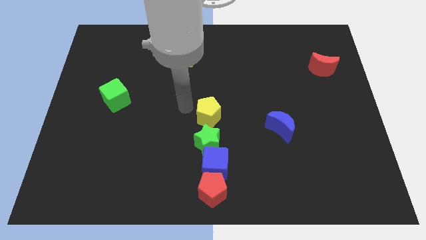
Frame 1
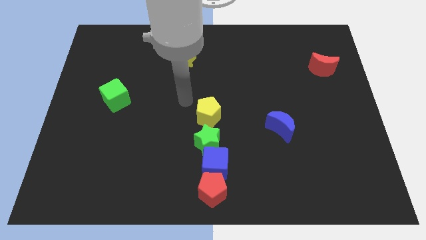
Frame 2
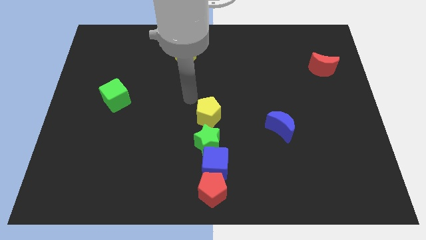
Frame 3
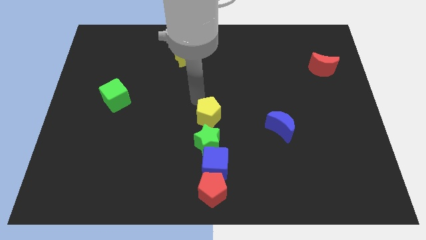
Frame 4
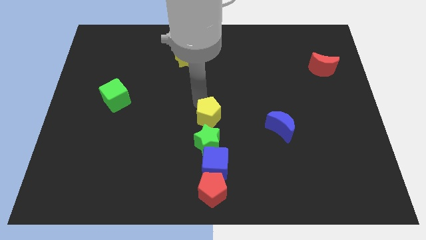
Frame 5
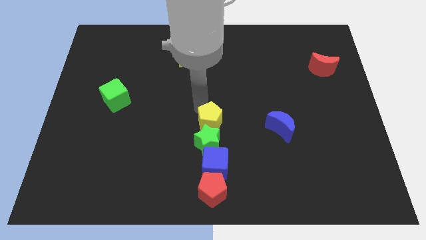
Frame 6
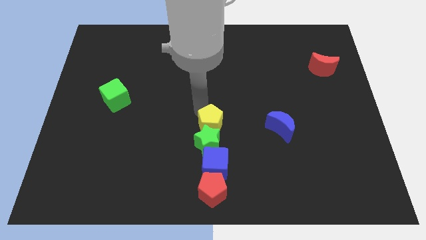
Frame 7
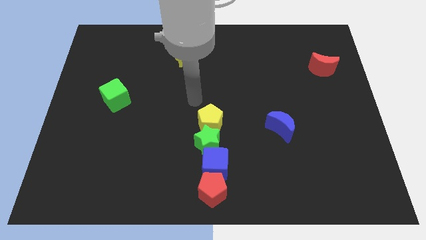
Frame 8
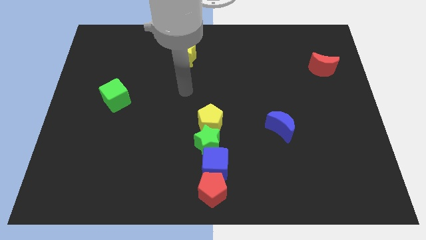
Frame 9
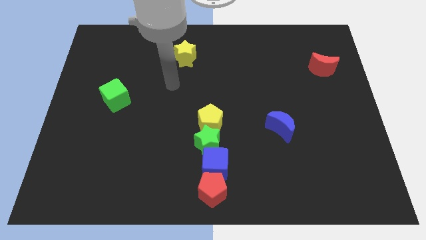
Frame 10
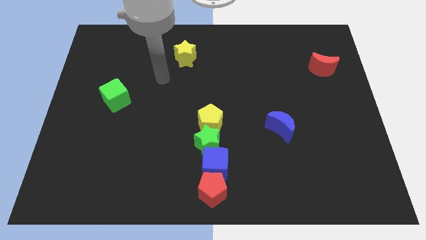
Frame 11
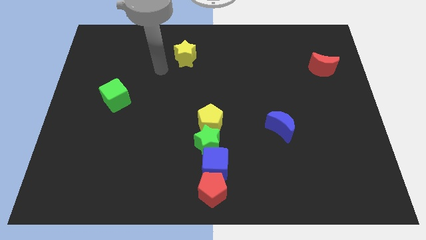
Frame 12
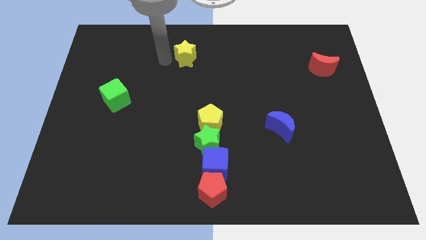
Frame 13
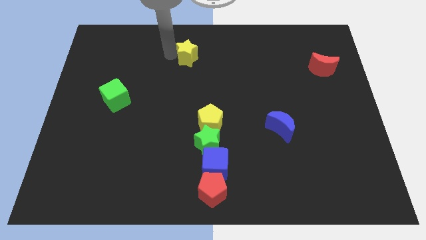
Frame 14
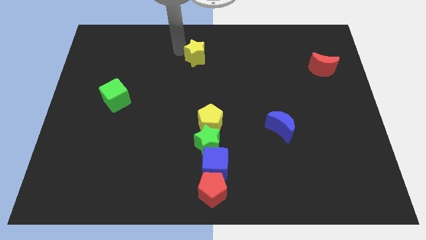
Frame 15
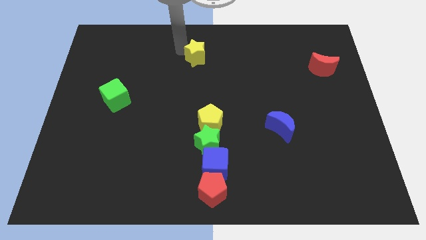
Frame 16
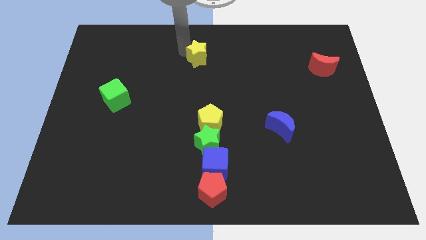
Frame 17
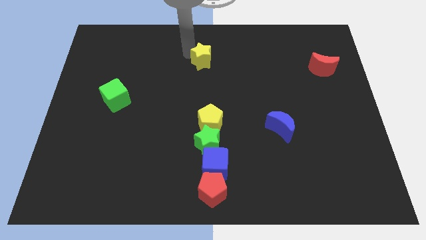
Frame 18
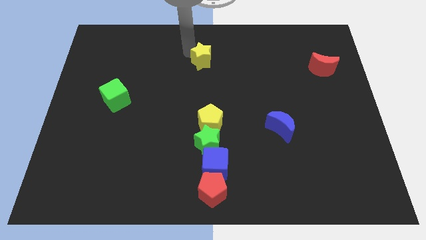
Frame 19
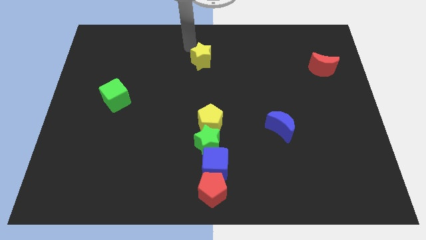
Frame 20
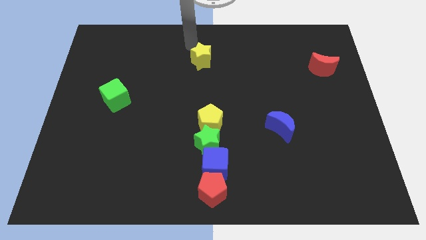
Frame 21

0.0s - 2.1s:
adjust the yellow pentagon to the bottom of green star

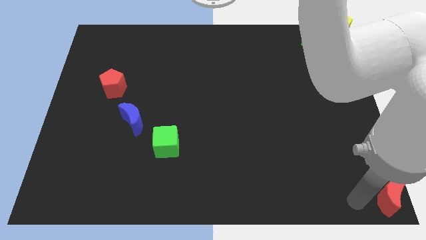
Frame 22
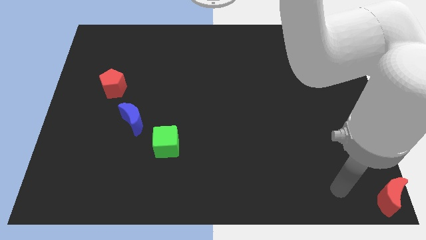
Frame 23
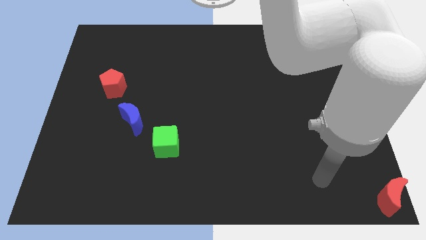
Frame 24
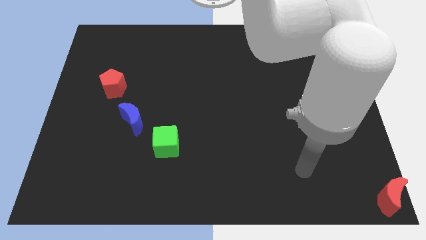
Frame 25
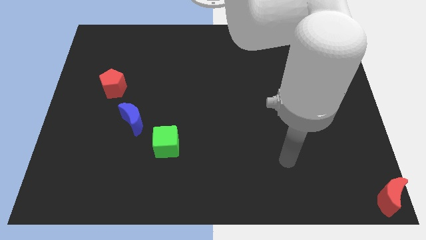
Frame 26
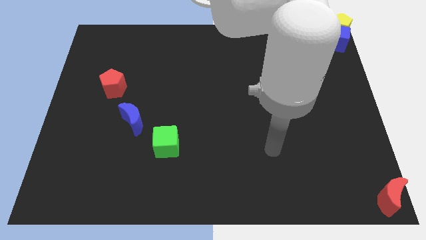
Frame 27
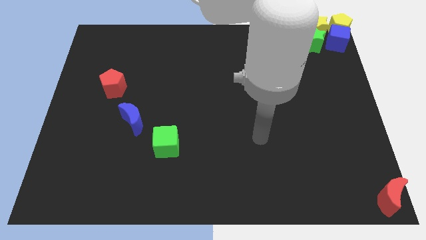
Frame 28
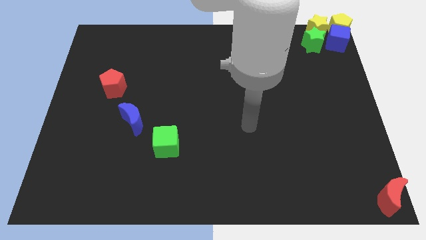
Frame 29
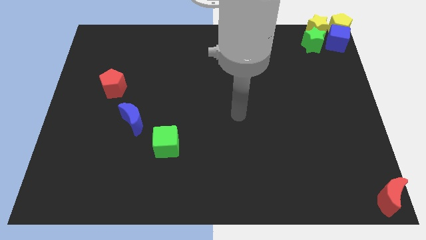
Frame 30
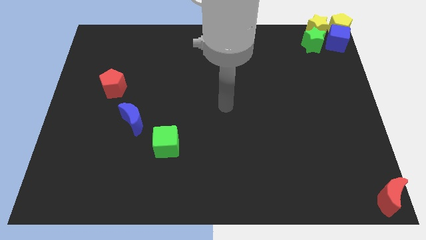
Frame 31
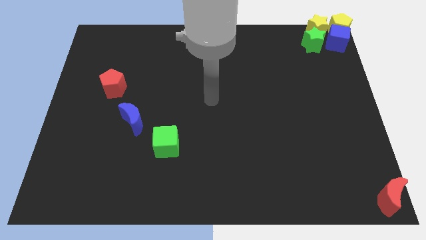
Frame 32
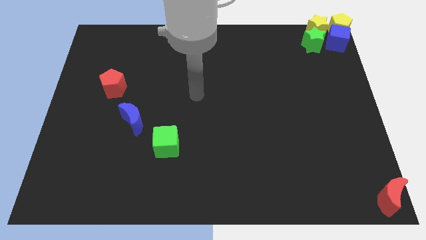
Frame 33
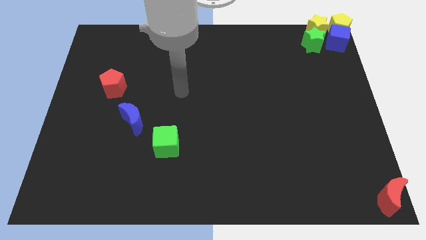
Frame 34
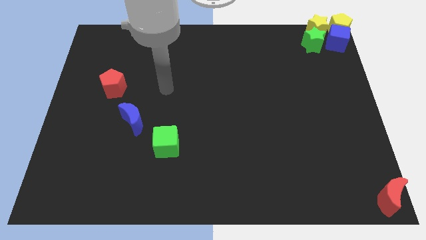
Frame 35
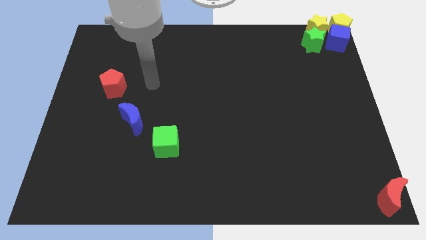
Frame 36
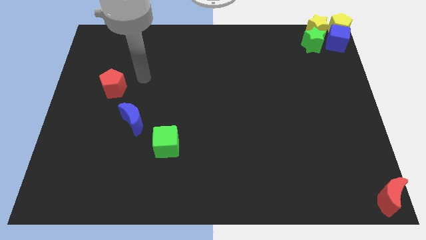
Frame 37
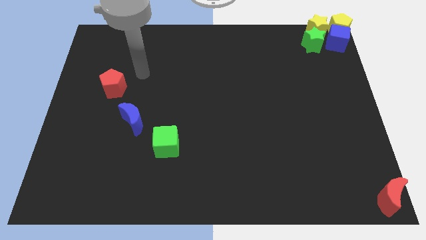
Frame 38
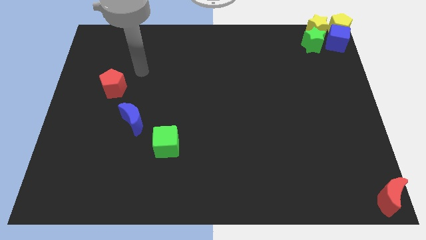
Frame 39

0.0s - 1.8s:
go away from the red moon

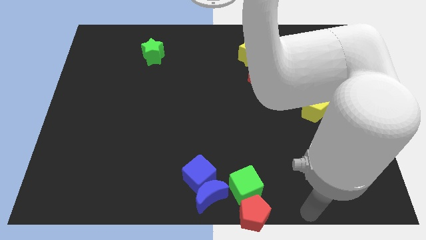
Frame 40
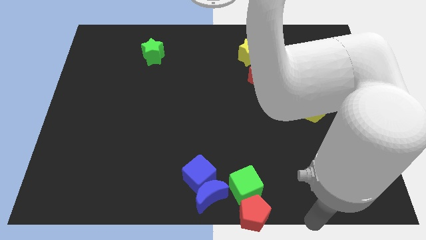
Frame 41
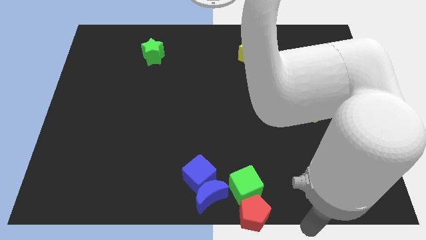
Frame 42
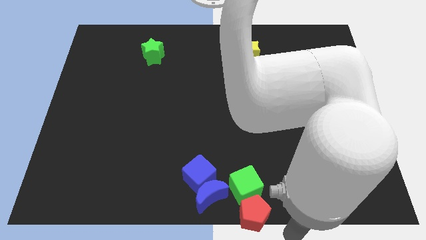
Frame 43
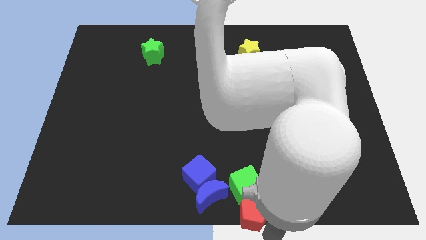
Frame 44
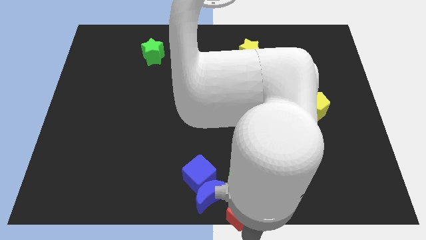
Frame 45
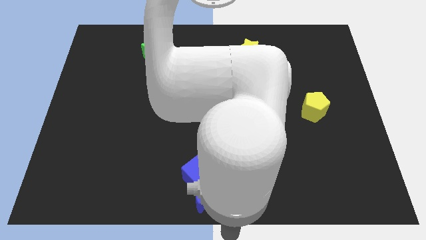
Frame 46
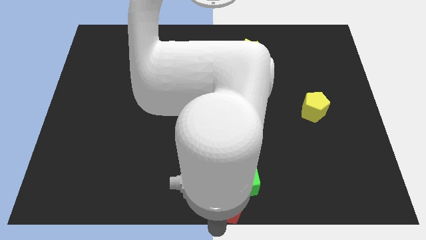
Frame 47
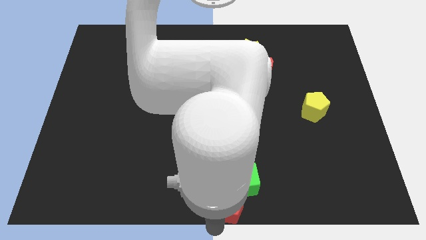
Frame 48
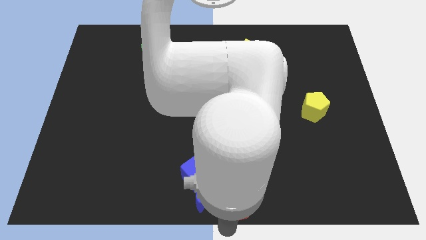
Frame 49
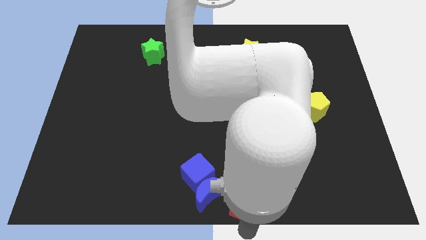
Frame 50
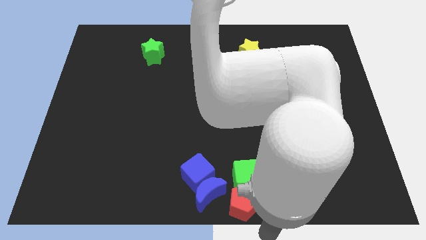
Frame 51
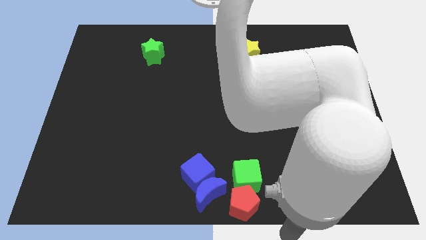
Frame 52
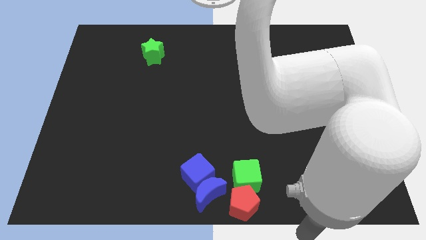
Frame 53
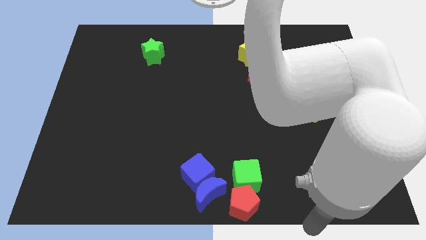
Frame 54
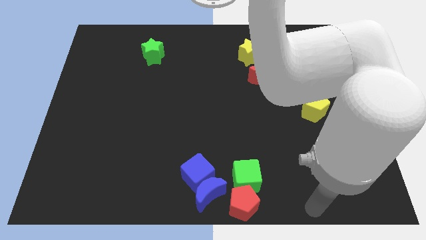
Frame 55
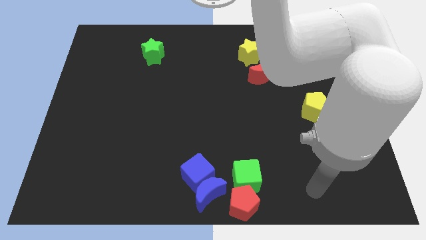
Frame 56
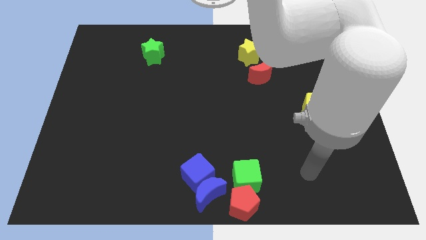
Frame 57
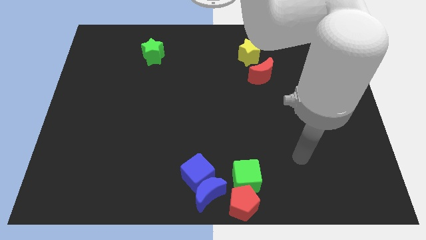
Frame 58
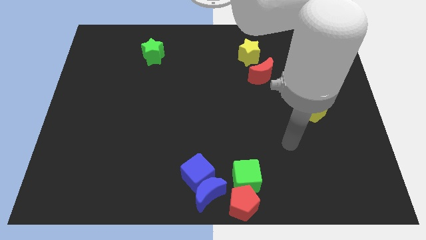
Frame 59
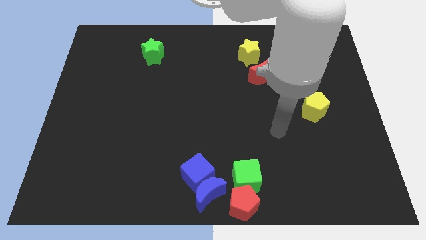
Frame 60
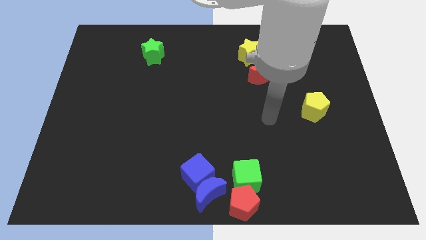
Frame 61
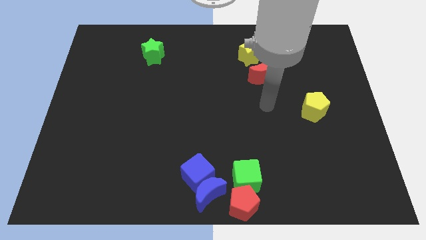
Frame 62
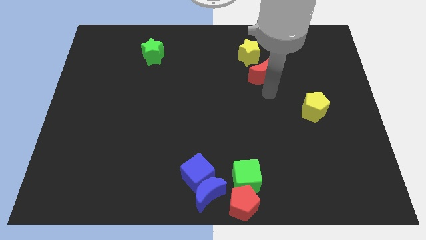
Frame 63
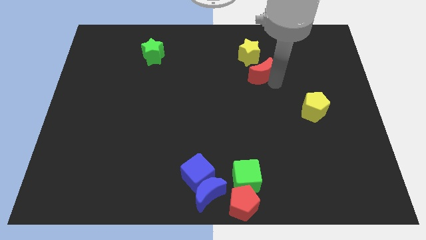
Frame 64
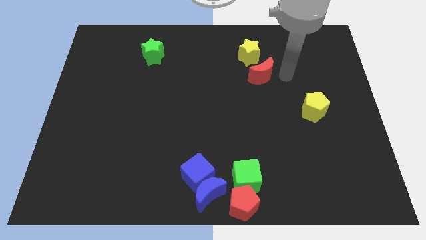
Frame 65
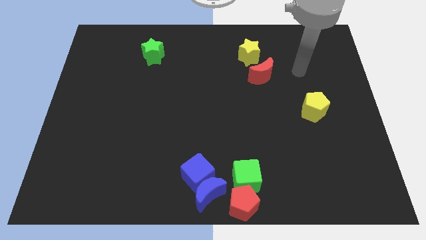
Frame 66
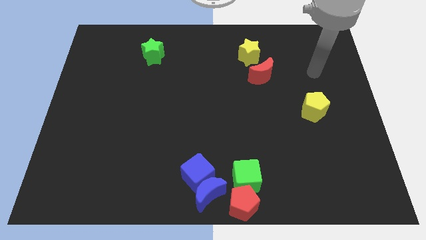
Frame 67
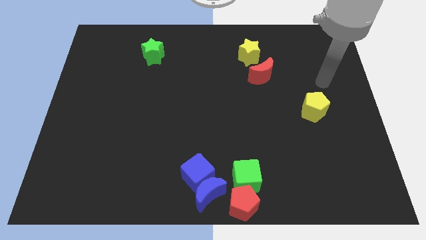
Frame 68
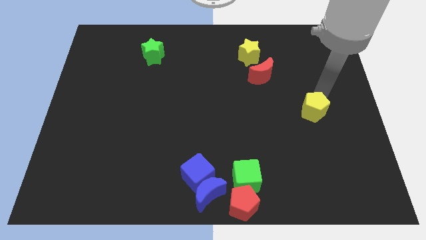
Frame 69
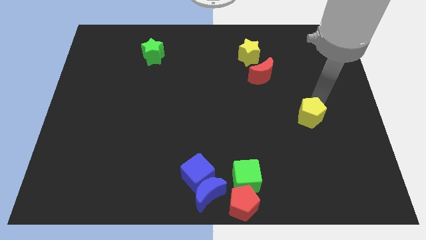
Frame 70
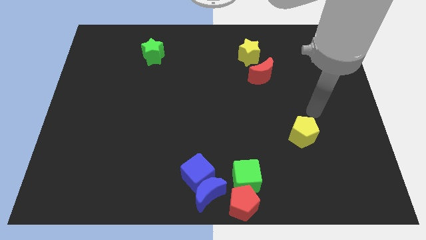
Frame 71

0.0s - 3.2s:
move your arm towards the top of the yellow pentagon

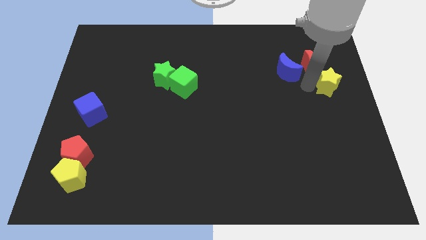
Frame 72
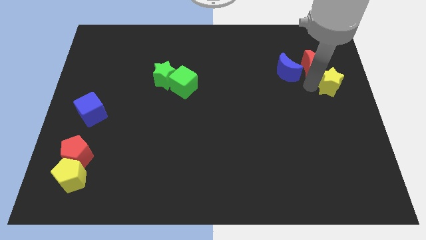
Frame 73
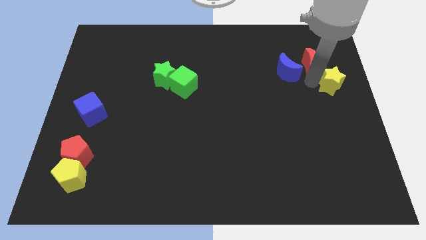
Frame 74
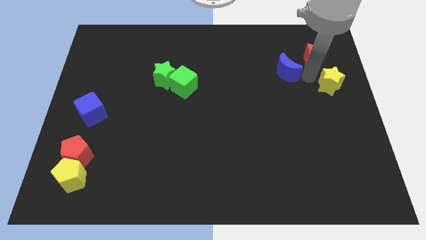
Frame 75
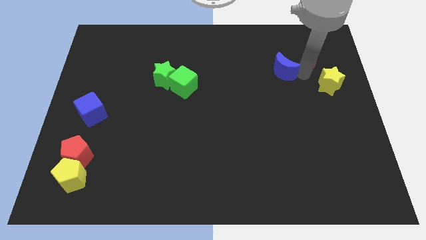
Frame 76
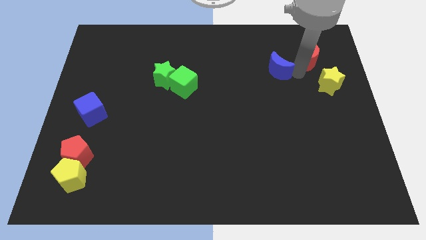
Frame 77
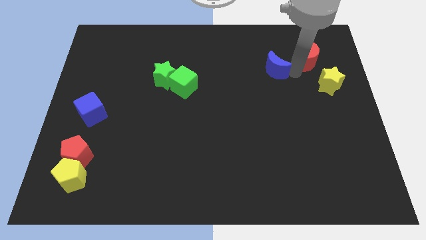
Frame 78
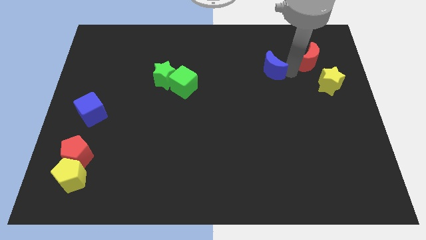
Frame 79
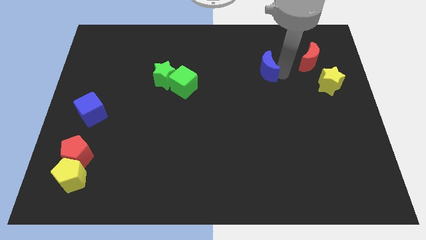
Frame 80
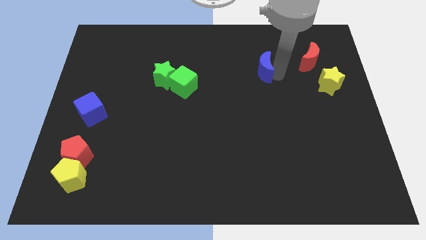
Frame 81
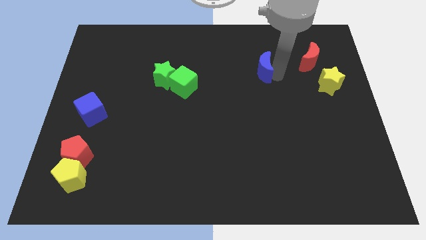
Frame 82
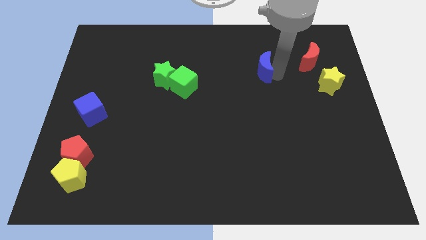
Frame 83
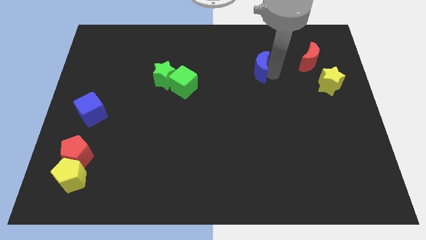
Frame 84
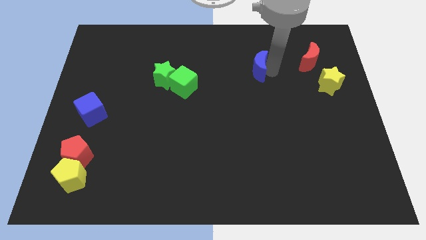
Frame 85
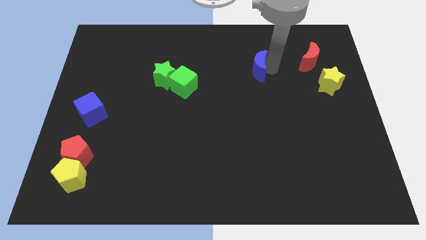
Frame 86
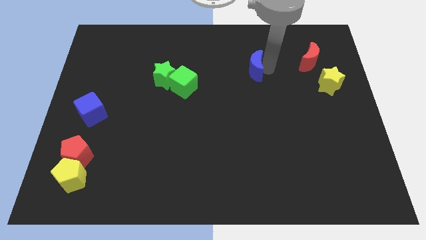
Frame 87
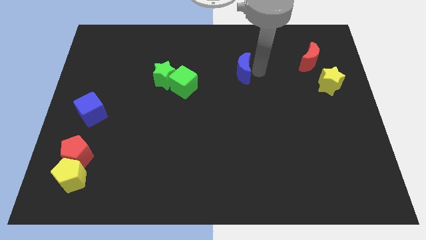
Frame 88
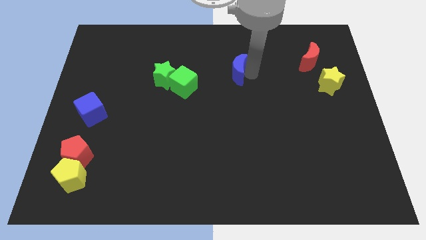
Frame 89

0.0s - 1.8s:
separate the blue moon and red moon

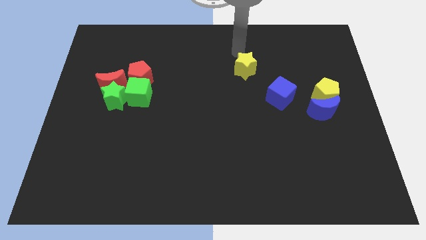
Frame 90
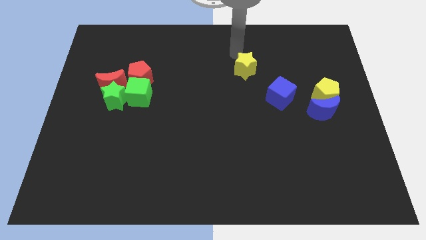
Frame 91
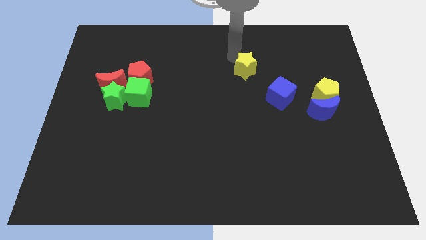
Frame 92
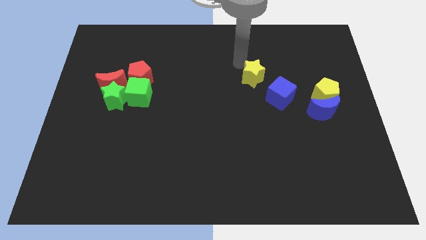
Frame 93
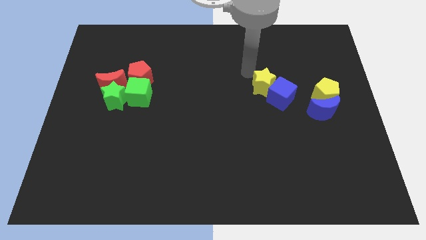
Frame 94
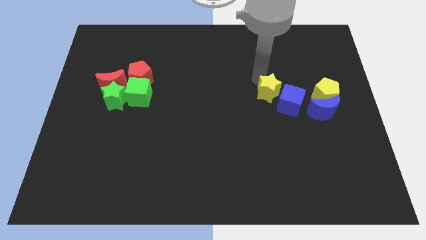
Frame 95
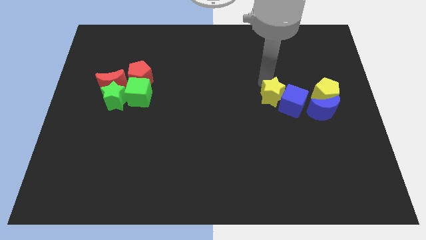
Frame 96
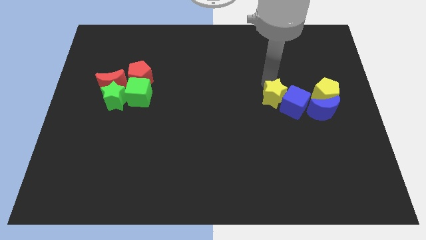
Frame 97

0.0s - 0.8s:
push the yellow star into the blue cube
